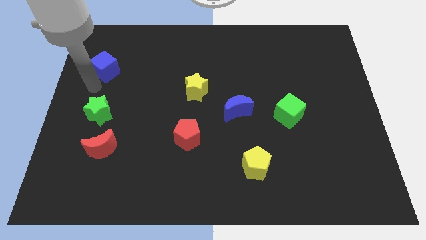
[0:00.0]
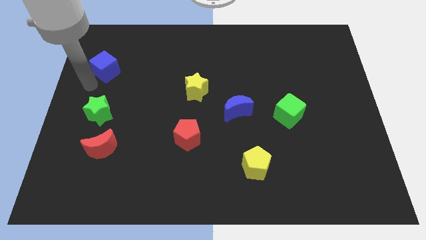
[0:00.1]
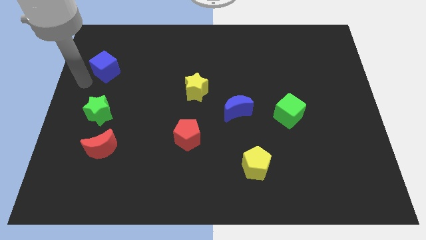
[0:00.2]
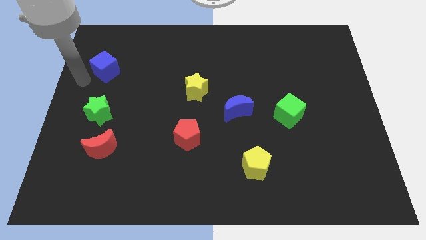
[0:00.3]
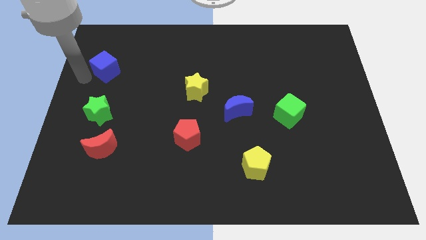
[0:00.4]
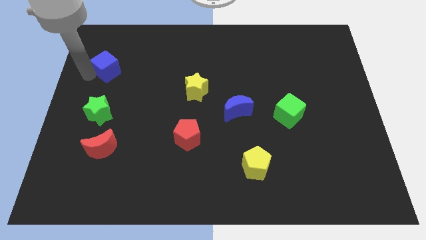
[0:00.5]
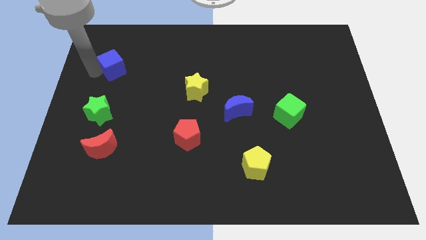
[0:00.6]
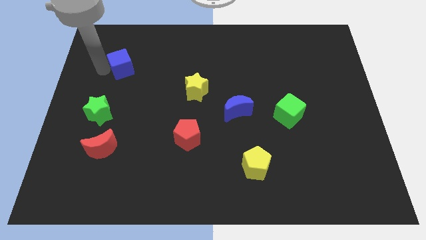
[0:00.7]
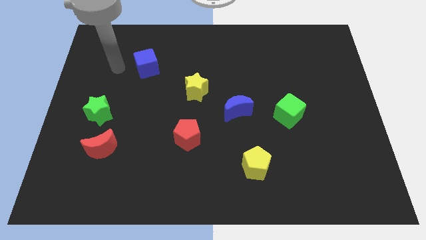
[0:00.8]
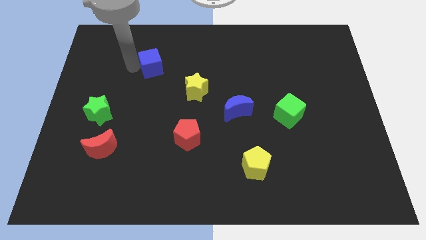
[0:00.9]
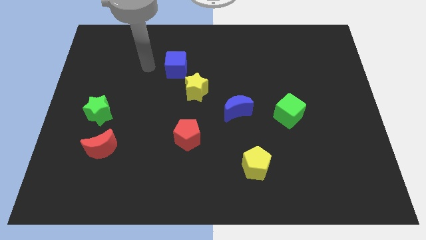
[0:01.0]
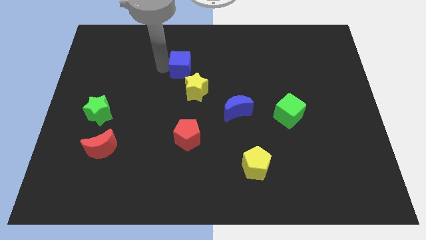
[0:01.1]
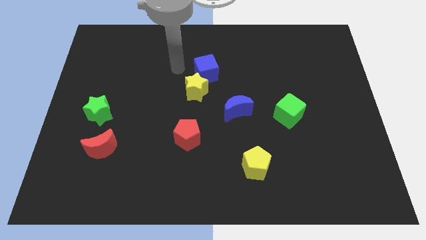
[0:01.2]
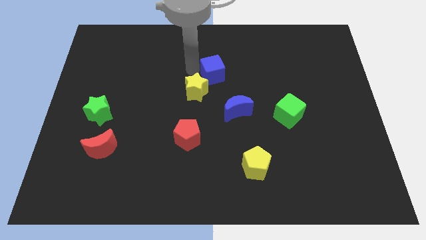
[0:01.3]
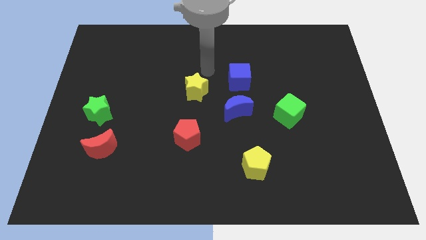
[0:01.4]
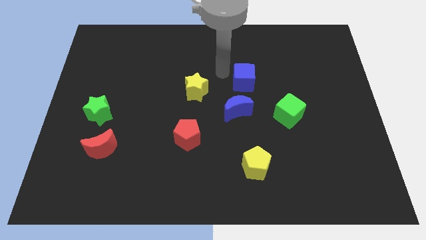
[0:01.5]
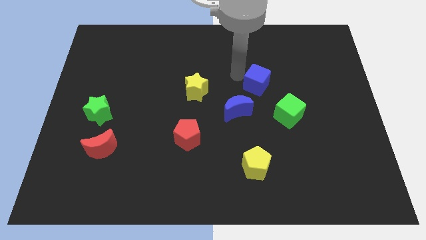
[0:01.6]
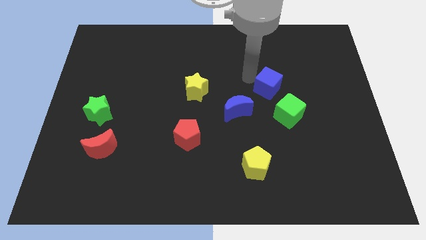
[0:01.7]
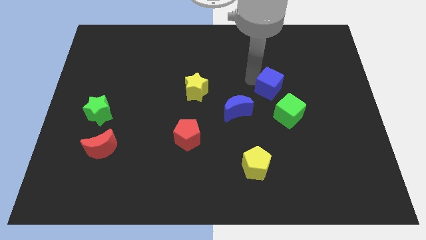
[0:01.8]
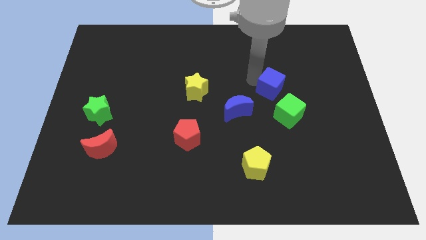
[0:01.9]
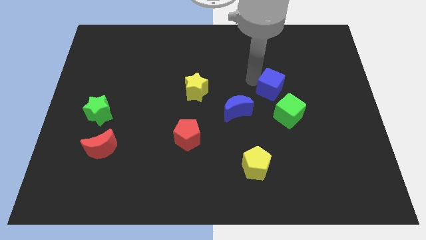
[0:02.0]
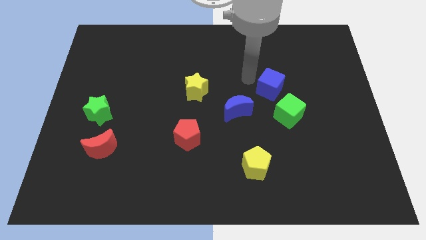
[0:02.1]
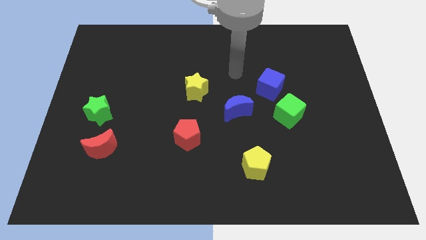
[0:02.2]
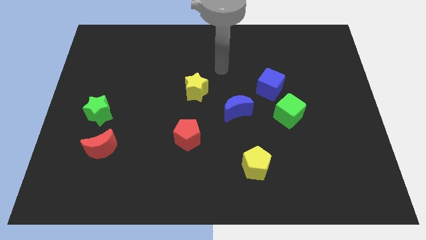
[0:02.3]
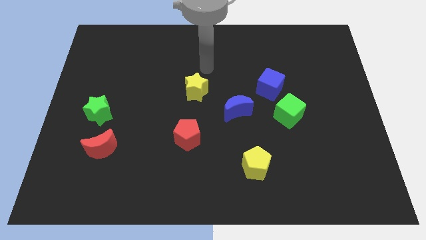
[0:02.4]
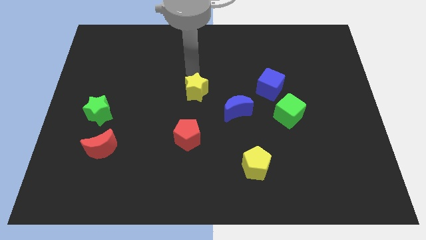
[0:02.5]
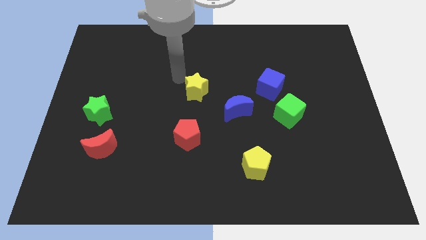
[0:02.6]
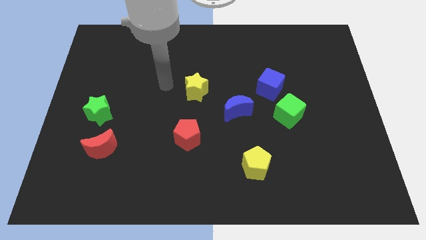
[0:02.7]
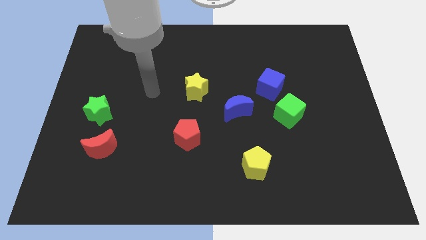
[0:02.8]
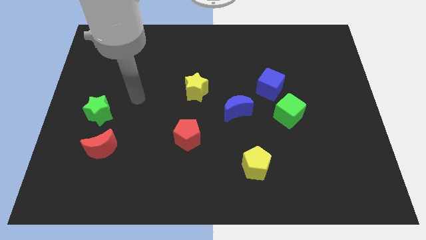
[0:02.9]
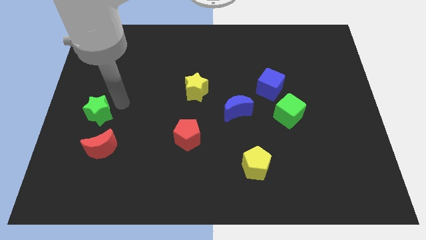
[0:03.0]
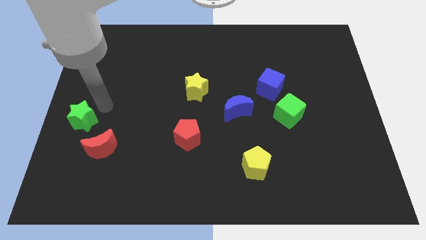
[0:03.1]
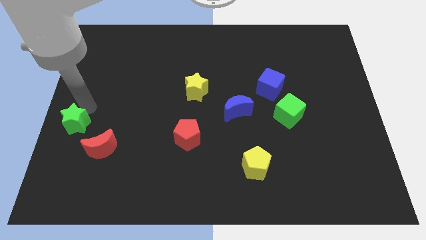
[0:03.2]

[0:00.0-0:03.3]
move the blue cube diagonal to the green cube

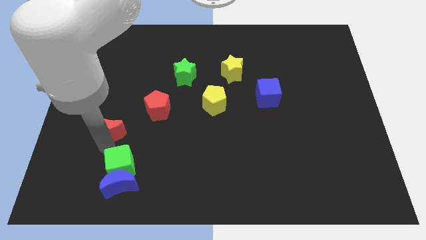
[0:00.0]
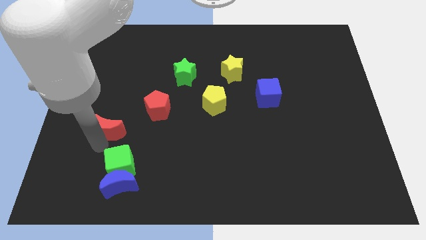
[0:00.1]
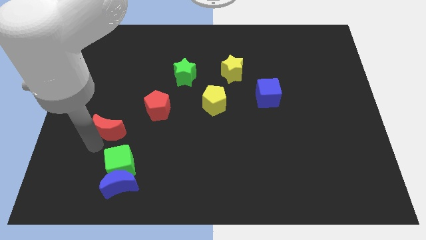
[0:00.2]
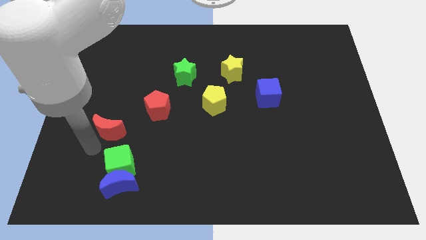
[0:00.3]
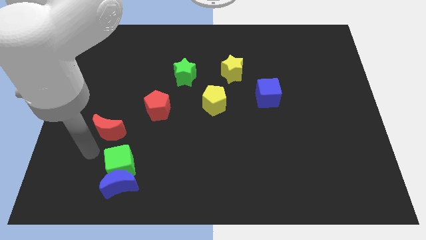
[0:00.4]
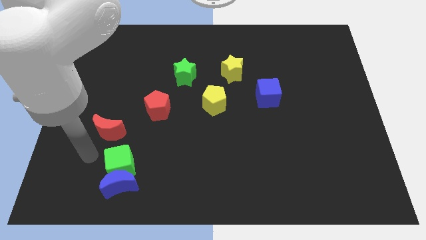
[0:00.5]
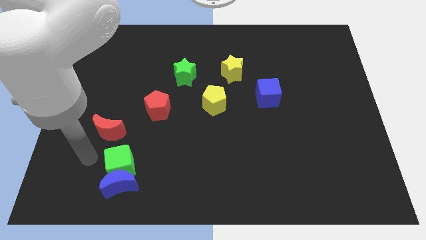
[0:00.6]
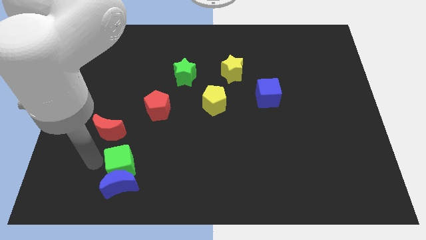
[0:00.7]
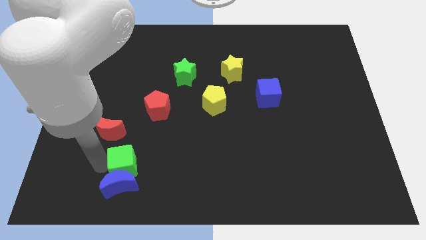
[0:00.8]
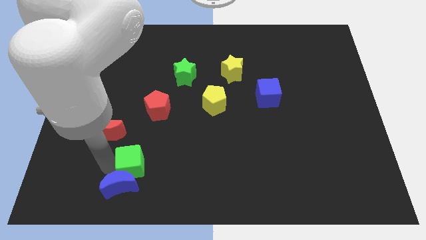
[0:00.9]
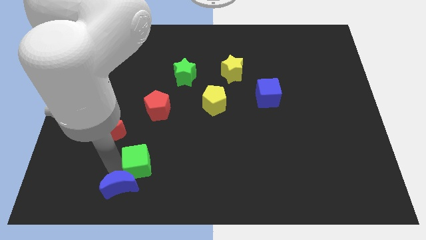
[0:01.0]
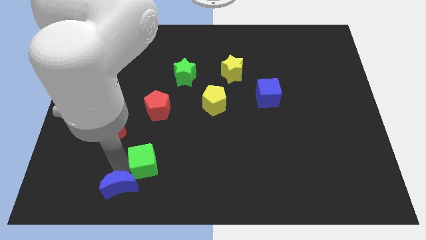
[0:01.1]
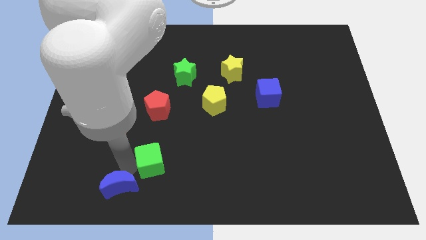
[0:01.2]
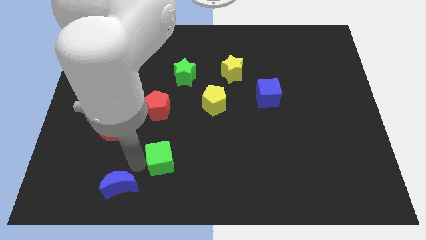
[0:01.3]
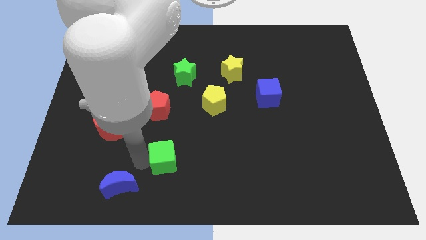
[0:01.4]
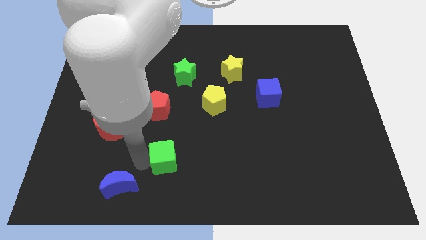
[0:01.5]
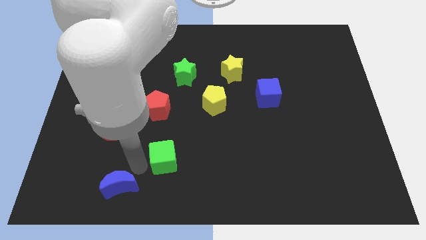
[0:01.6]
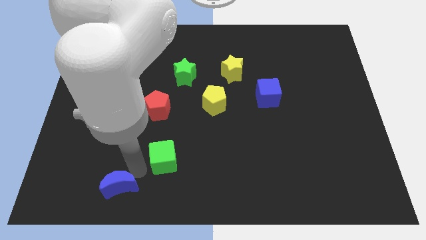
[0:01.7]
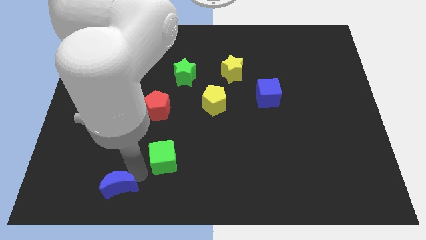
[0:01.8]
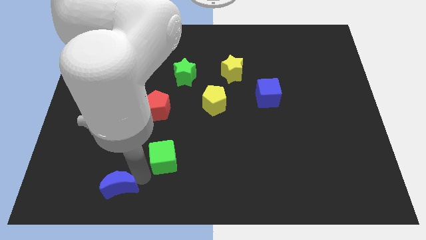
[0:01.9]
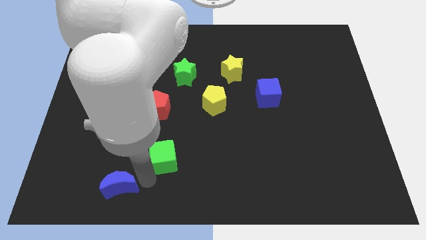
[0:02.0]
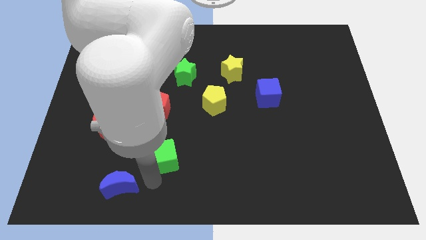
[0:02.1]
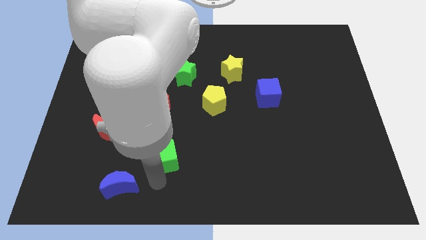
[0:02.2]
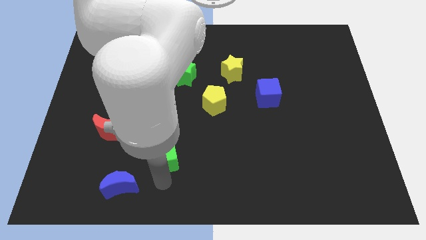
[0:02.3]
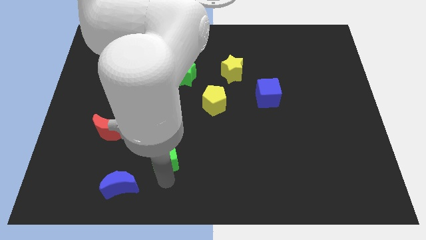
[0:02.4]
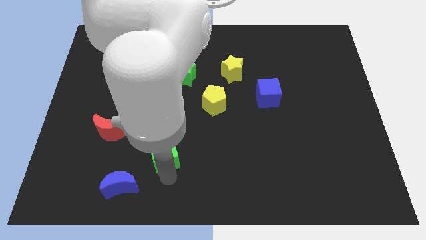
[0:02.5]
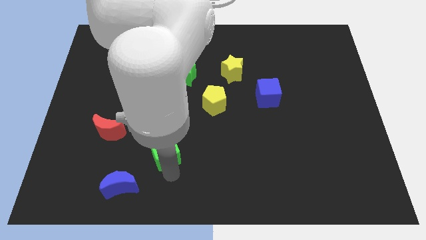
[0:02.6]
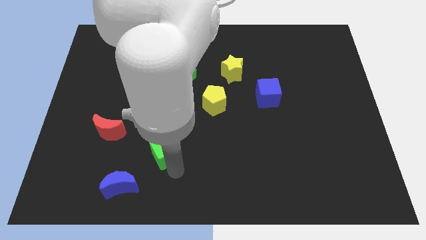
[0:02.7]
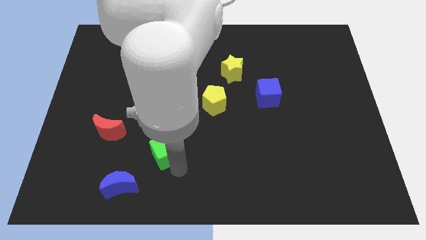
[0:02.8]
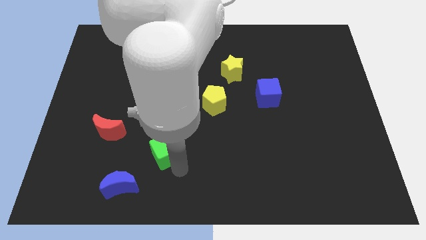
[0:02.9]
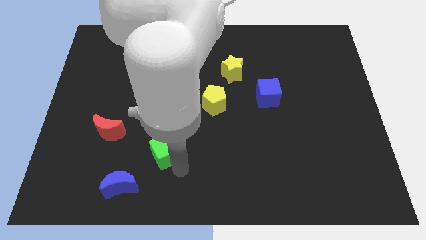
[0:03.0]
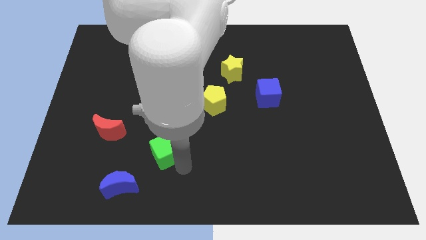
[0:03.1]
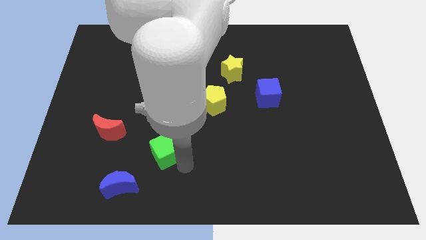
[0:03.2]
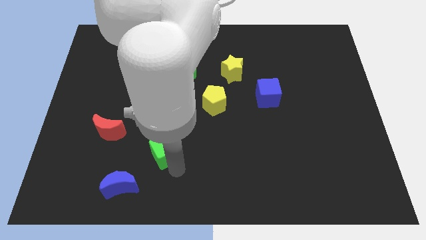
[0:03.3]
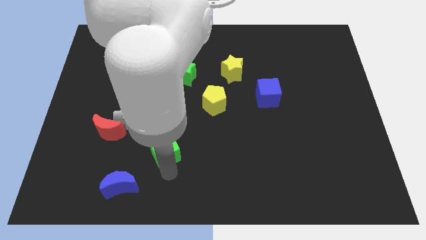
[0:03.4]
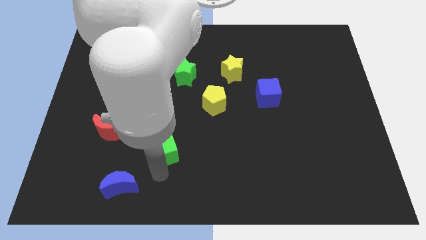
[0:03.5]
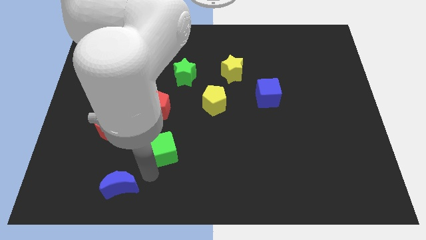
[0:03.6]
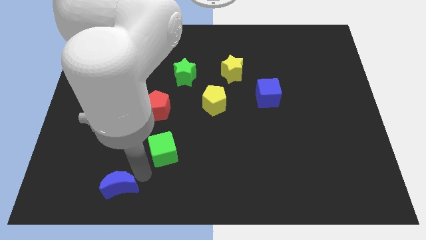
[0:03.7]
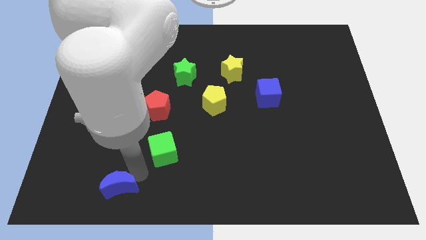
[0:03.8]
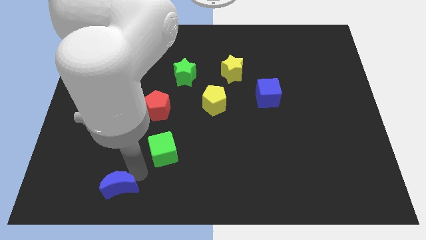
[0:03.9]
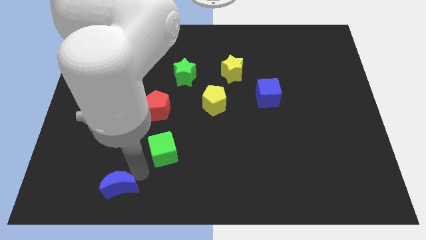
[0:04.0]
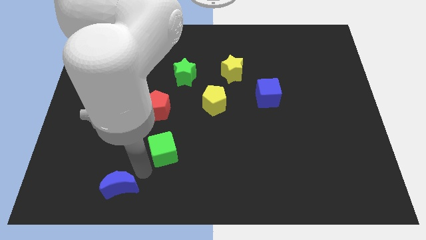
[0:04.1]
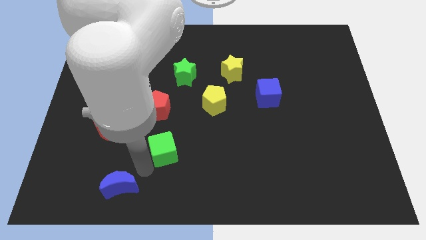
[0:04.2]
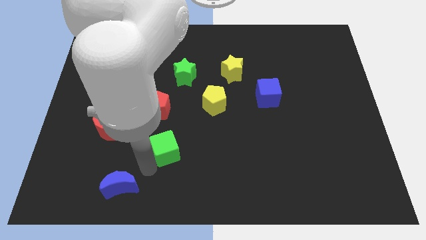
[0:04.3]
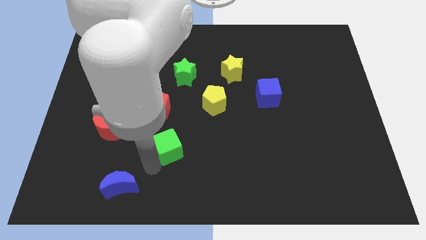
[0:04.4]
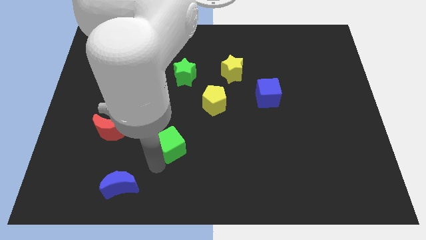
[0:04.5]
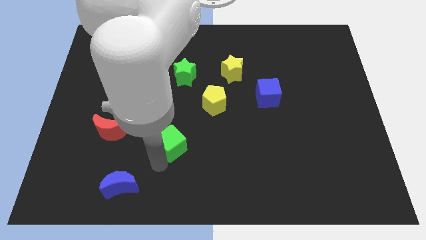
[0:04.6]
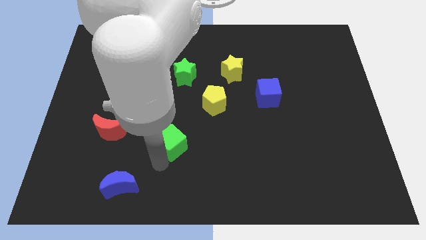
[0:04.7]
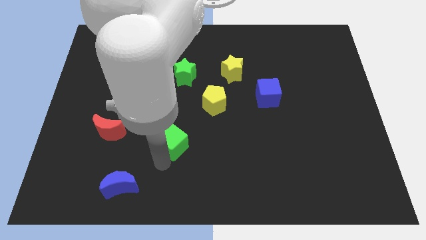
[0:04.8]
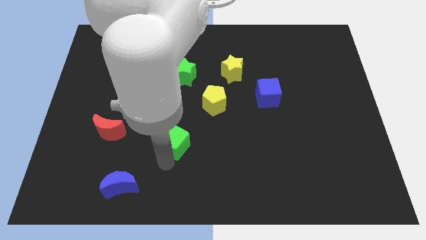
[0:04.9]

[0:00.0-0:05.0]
place the green cube below the red pentagon

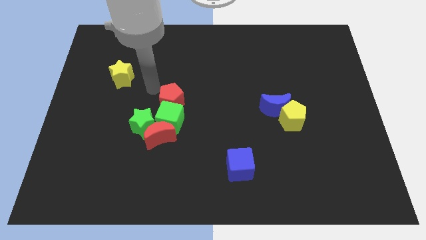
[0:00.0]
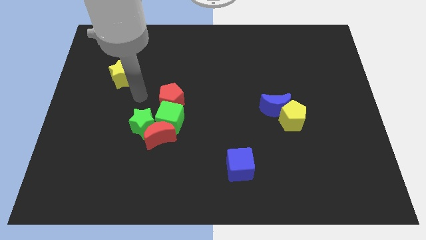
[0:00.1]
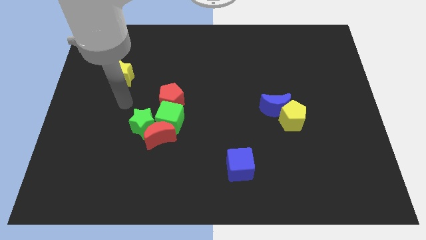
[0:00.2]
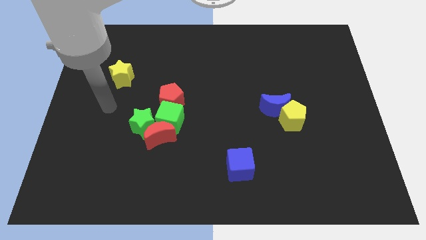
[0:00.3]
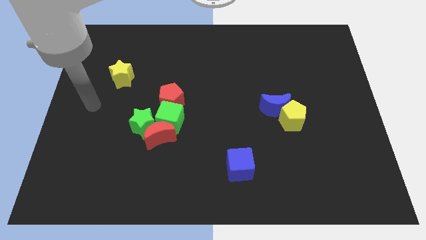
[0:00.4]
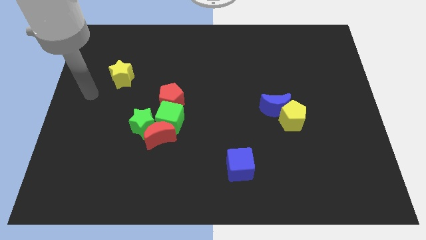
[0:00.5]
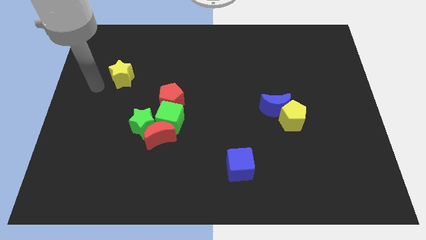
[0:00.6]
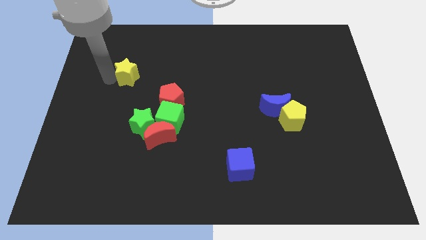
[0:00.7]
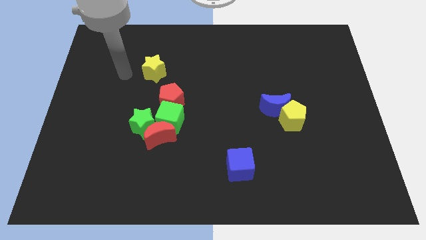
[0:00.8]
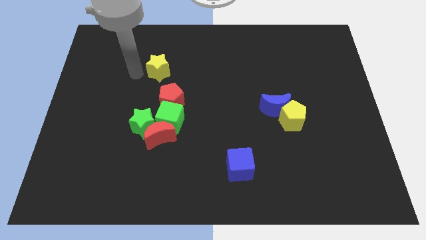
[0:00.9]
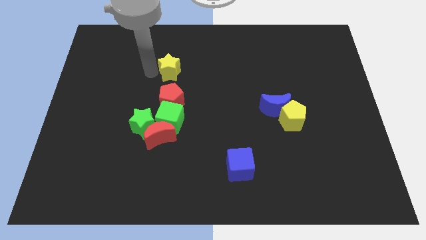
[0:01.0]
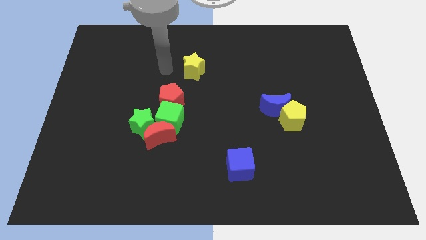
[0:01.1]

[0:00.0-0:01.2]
place the yellow star vertically above the red pentagon
